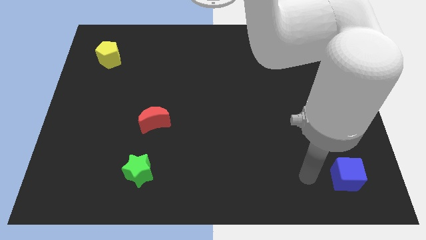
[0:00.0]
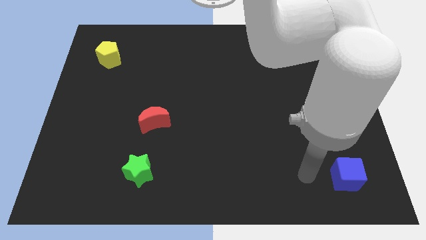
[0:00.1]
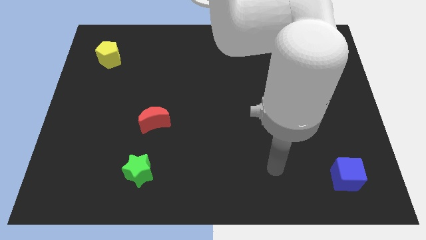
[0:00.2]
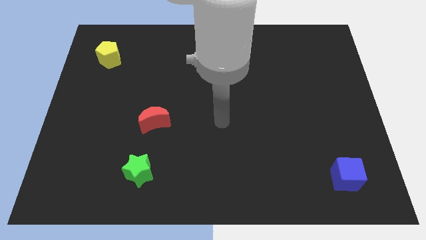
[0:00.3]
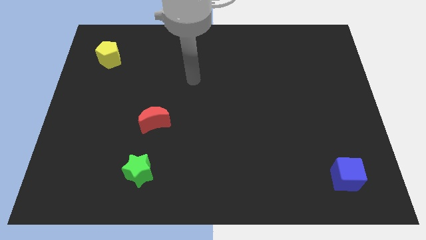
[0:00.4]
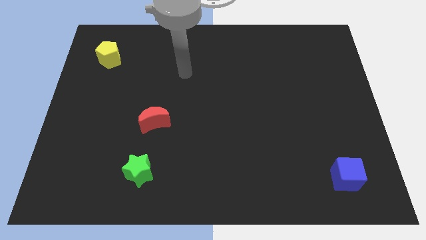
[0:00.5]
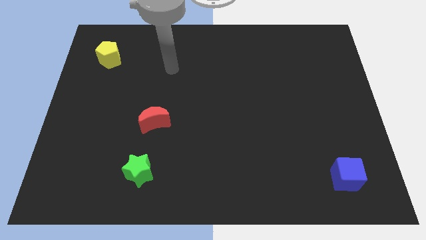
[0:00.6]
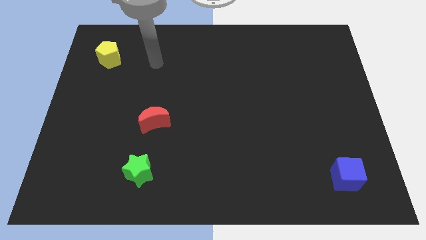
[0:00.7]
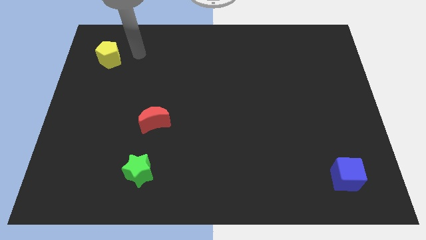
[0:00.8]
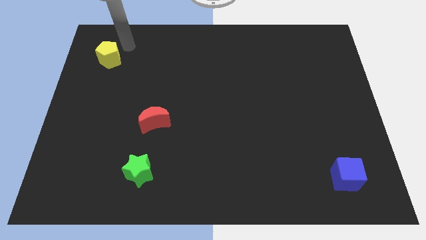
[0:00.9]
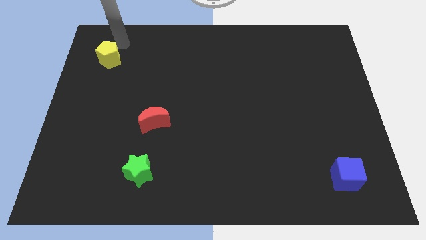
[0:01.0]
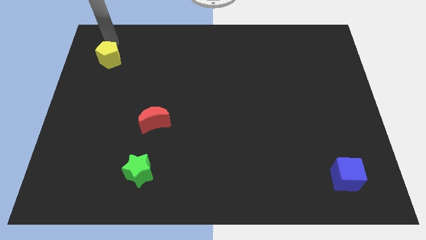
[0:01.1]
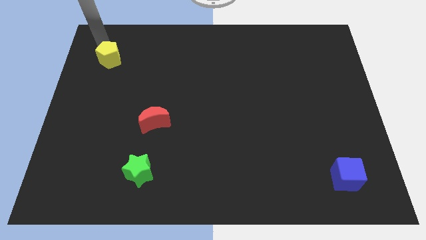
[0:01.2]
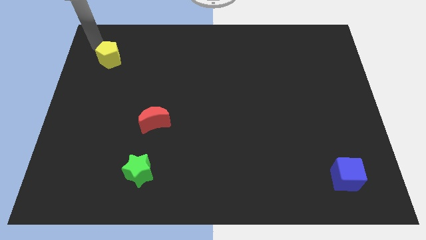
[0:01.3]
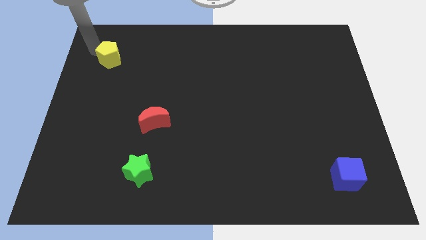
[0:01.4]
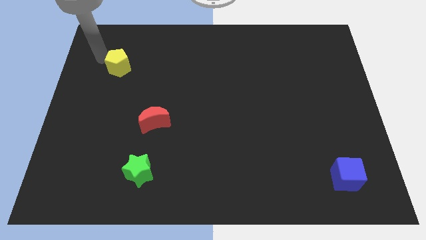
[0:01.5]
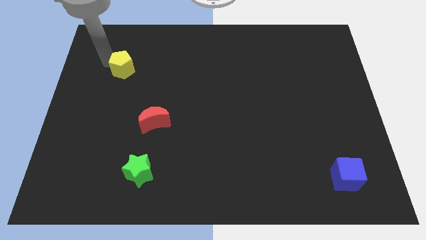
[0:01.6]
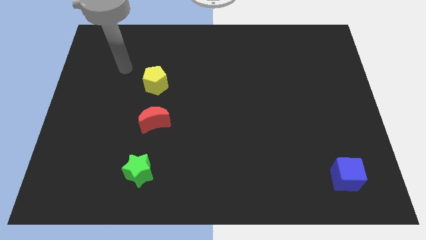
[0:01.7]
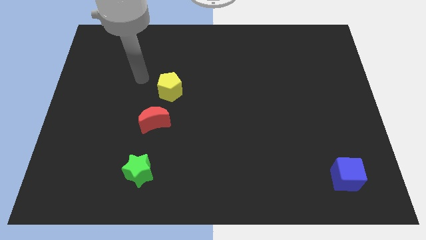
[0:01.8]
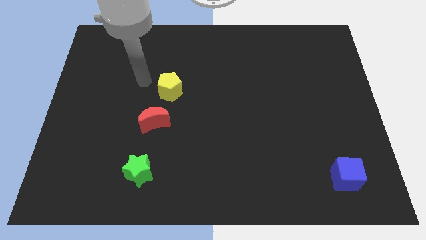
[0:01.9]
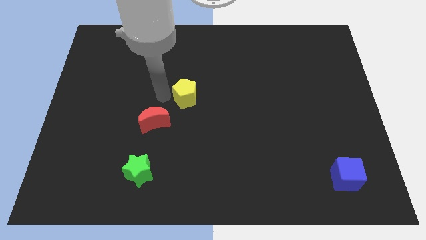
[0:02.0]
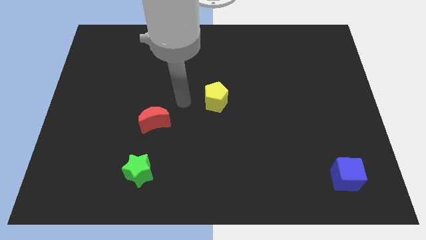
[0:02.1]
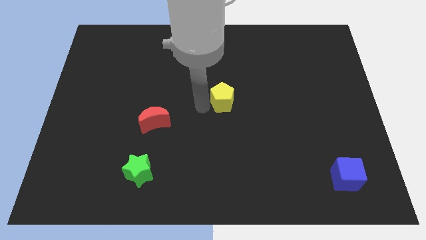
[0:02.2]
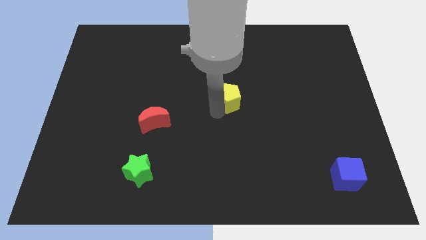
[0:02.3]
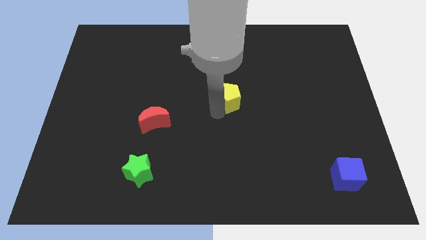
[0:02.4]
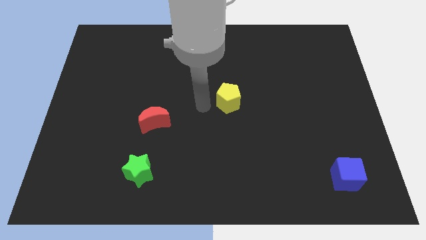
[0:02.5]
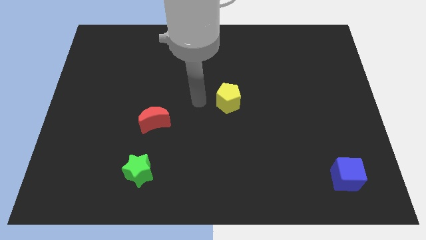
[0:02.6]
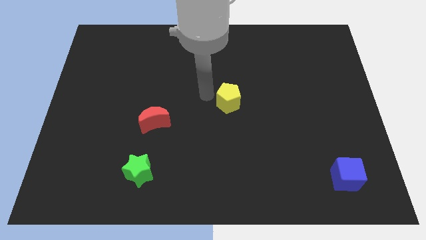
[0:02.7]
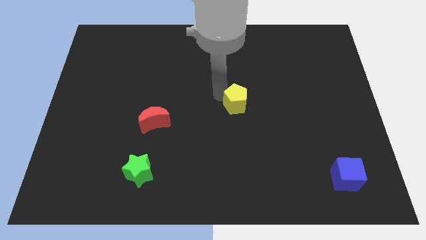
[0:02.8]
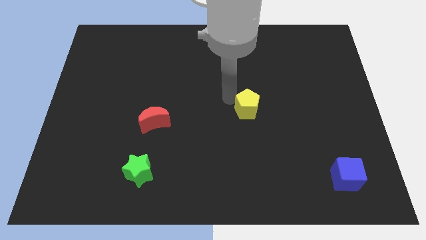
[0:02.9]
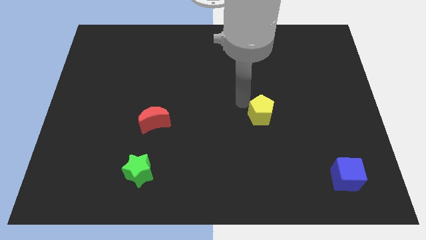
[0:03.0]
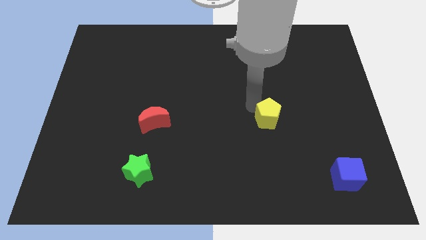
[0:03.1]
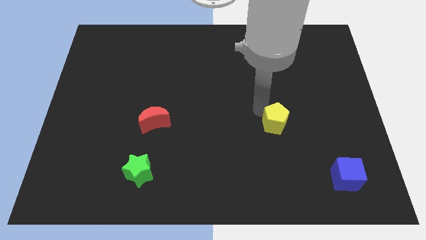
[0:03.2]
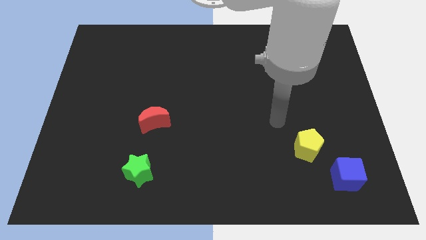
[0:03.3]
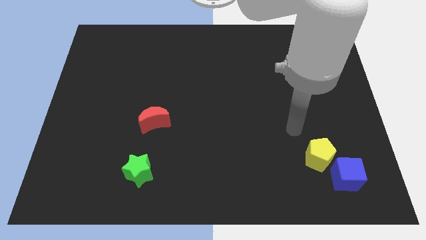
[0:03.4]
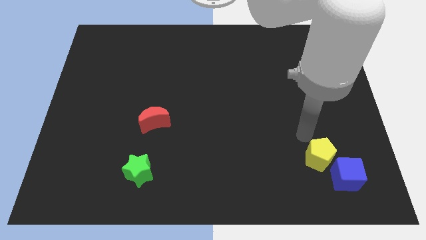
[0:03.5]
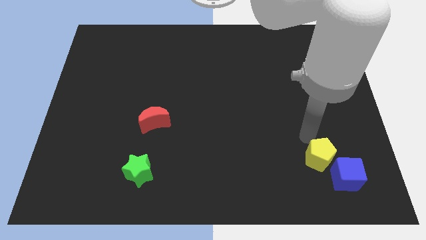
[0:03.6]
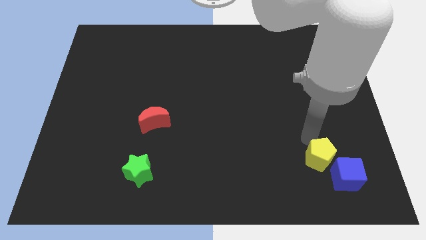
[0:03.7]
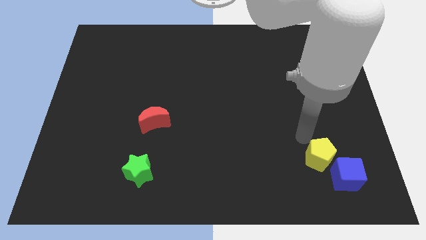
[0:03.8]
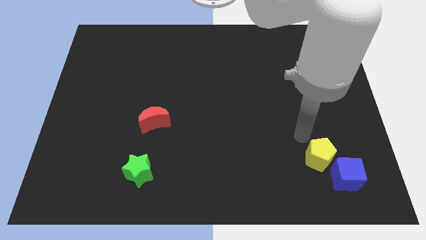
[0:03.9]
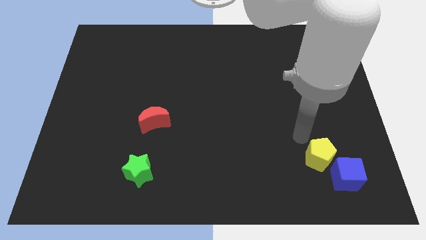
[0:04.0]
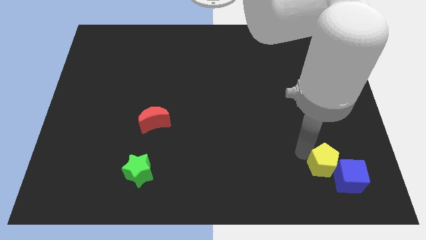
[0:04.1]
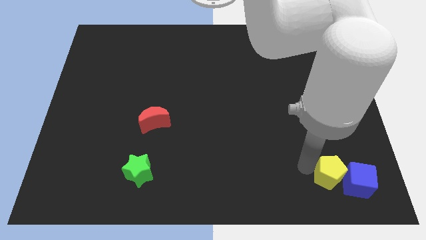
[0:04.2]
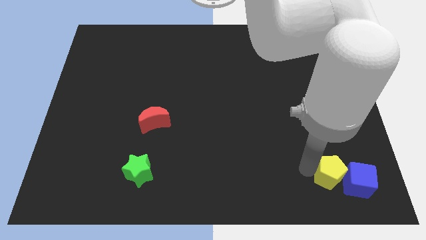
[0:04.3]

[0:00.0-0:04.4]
slide the yellow pentagon close to the blue cube
